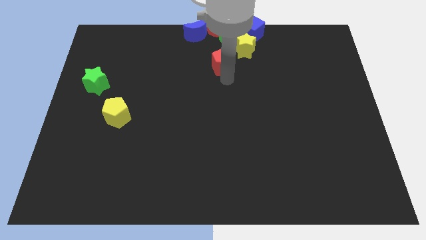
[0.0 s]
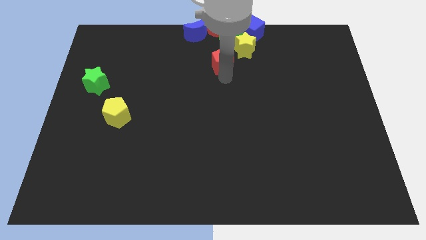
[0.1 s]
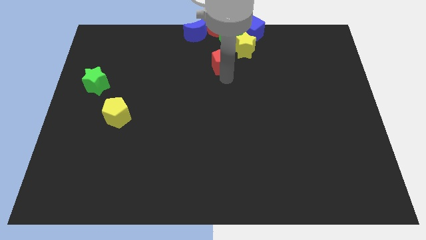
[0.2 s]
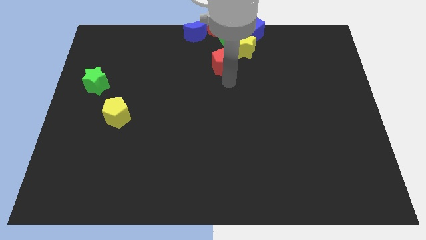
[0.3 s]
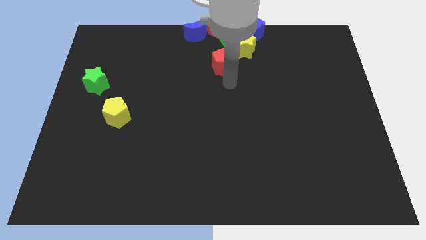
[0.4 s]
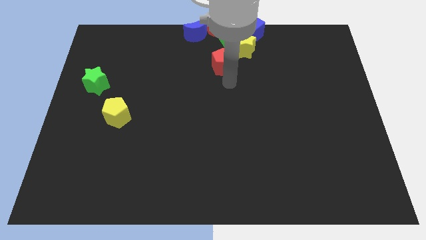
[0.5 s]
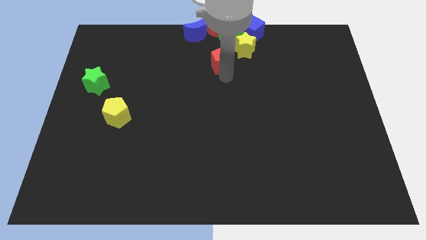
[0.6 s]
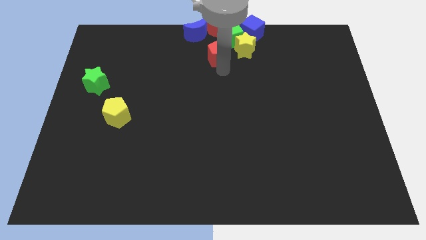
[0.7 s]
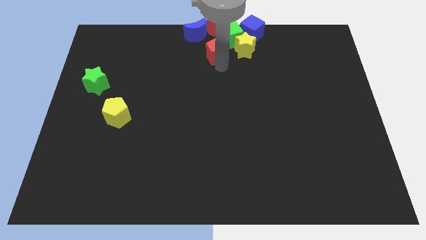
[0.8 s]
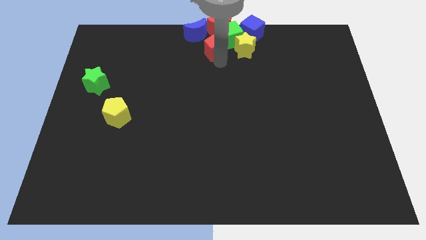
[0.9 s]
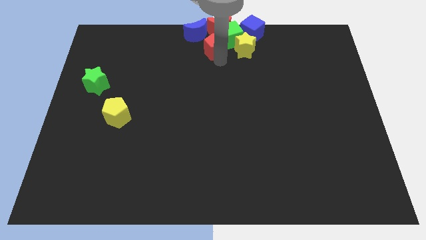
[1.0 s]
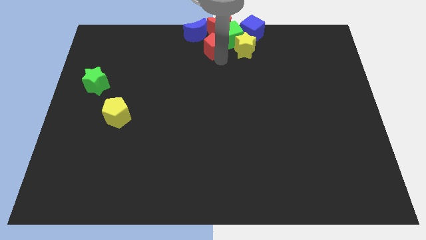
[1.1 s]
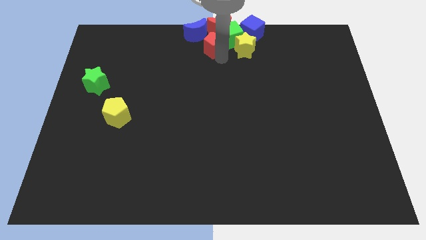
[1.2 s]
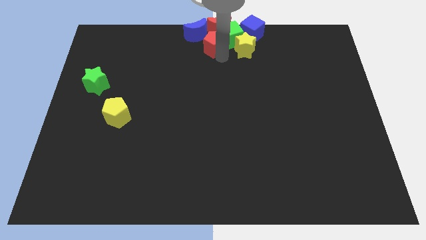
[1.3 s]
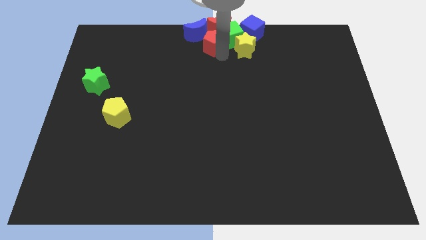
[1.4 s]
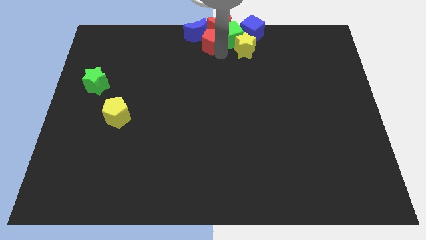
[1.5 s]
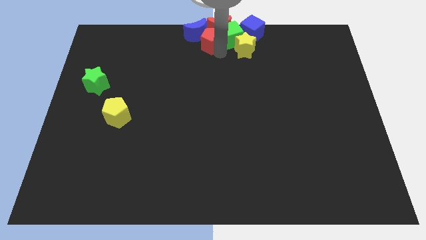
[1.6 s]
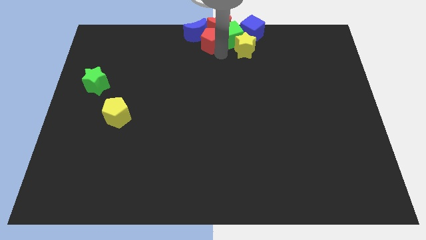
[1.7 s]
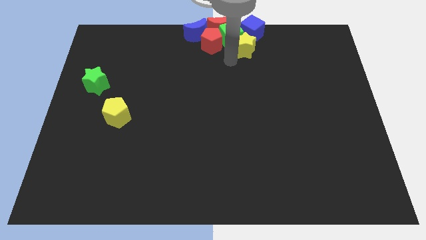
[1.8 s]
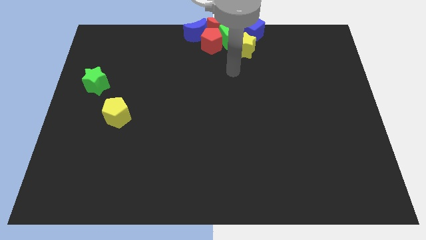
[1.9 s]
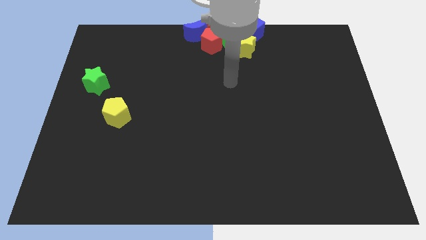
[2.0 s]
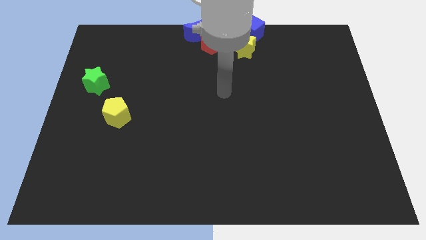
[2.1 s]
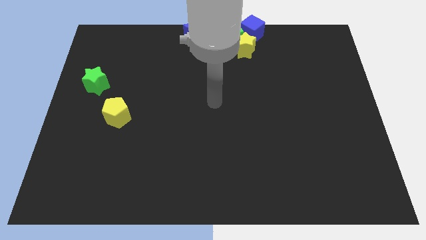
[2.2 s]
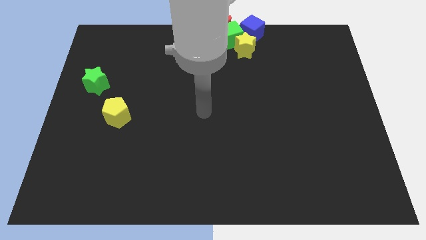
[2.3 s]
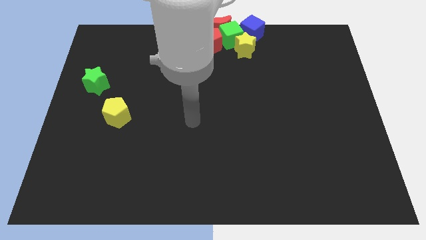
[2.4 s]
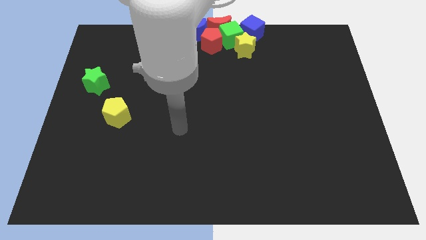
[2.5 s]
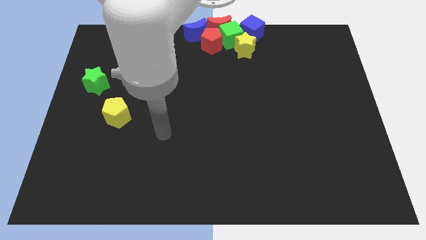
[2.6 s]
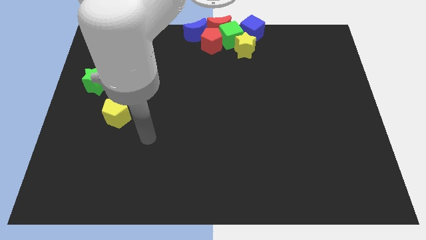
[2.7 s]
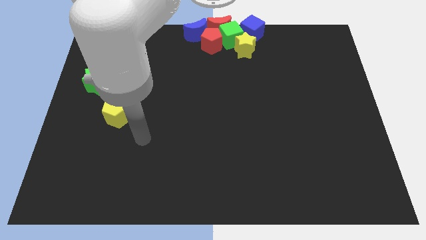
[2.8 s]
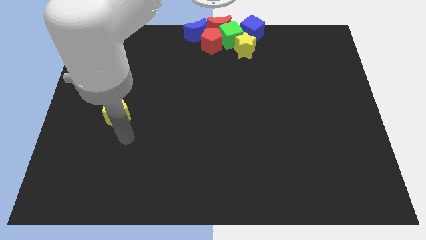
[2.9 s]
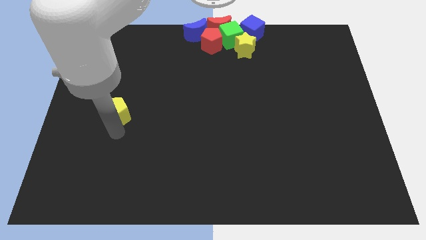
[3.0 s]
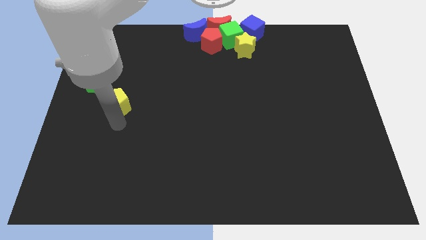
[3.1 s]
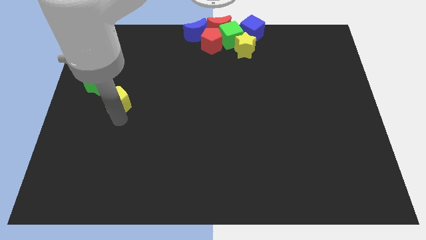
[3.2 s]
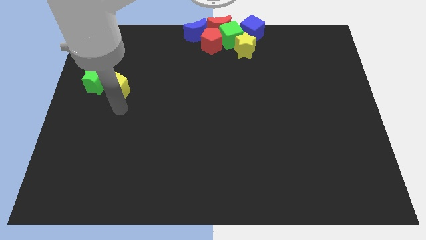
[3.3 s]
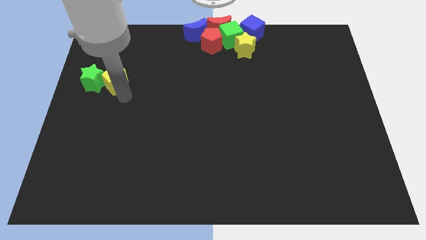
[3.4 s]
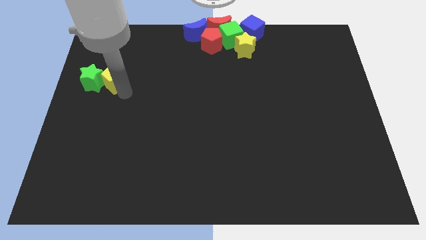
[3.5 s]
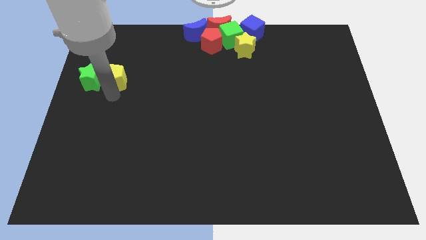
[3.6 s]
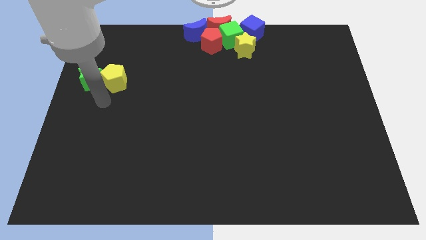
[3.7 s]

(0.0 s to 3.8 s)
place yellow pentagon right to green star

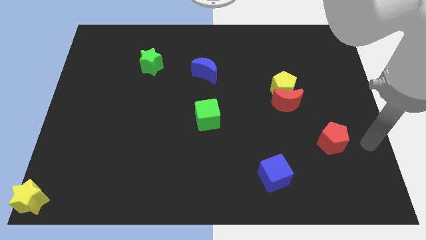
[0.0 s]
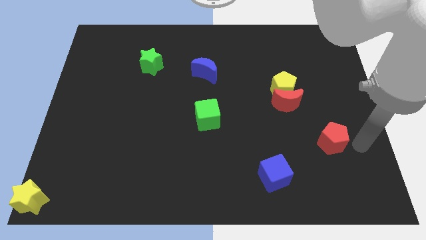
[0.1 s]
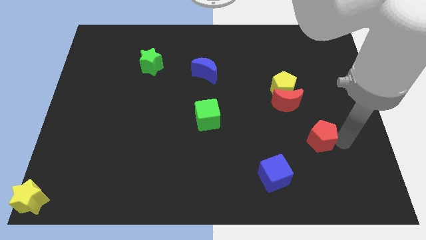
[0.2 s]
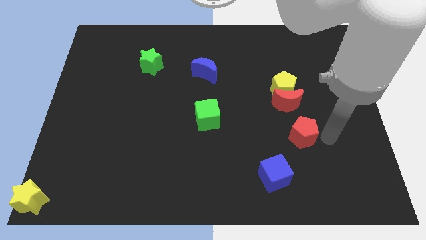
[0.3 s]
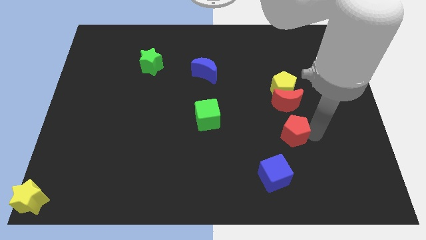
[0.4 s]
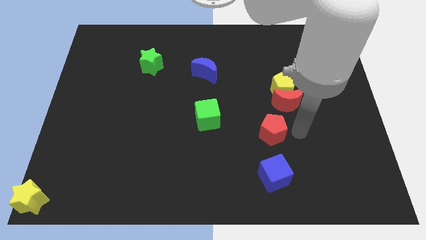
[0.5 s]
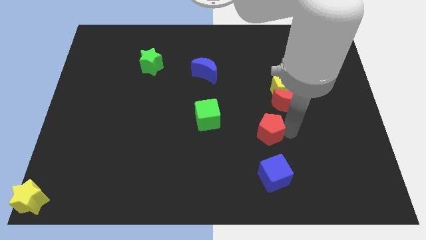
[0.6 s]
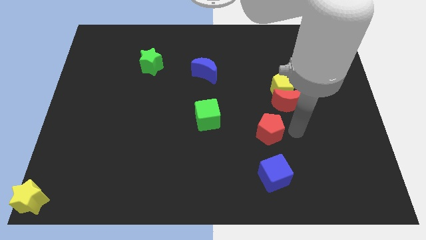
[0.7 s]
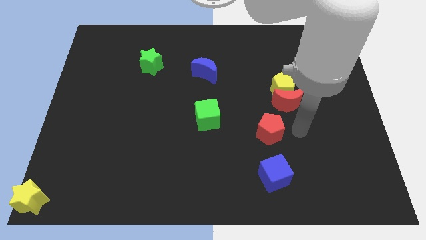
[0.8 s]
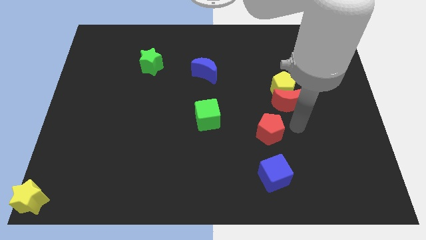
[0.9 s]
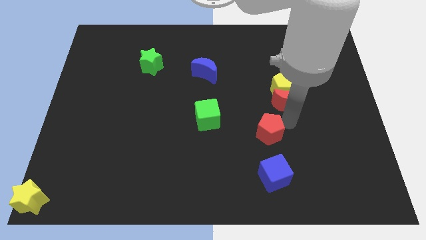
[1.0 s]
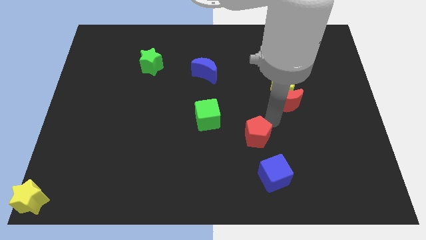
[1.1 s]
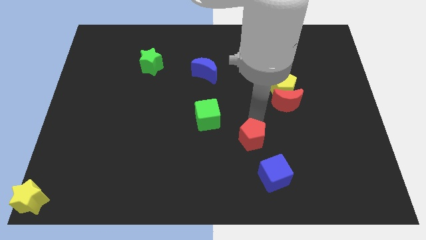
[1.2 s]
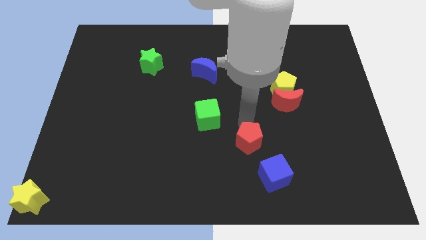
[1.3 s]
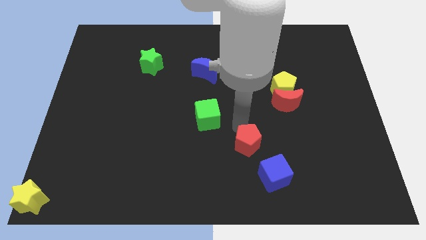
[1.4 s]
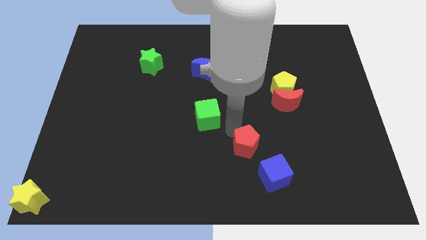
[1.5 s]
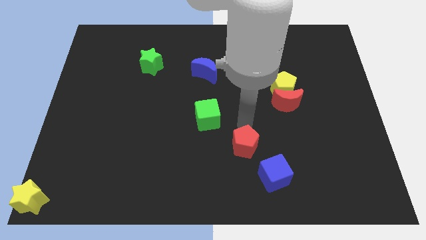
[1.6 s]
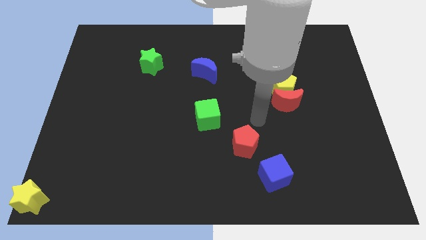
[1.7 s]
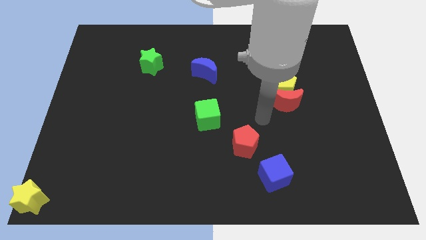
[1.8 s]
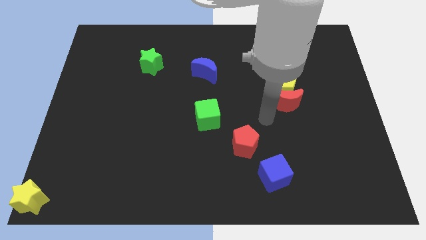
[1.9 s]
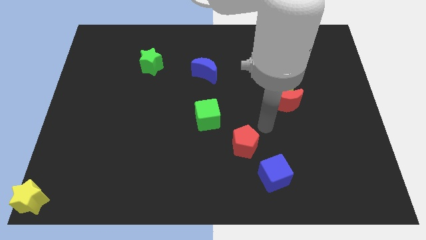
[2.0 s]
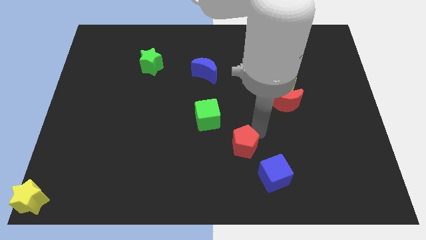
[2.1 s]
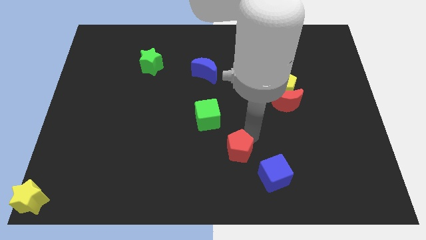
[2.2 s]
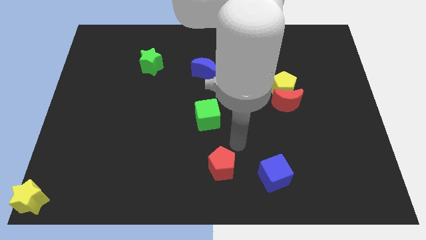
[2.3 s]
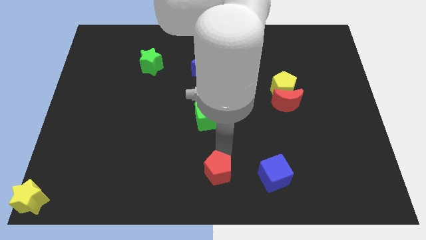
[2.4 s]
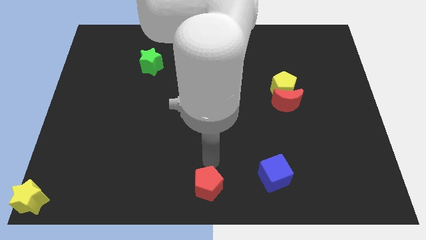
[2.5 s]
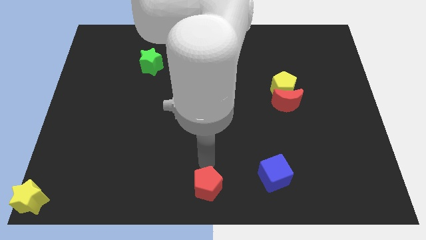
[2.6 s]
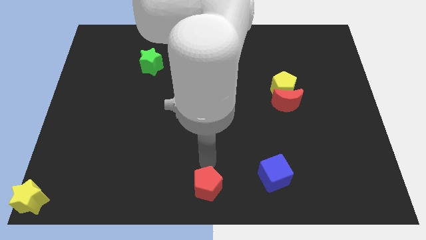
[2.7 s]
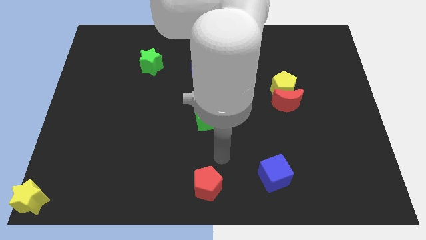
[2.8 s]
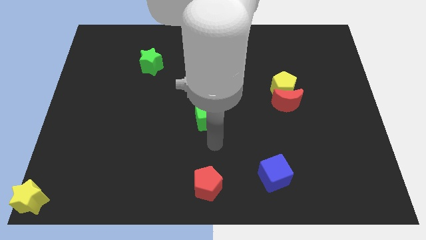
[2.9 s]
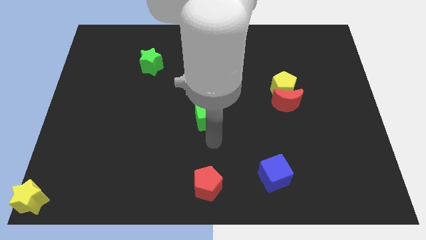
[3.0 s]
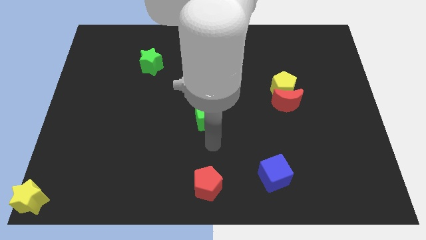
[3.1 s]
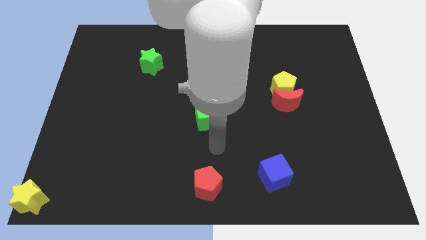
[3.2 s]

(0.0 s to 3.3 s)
move the red pentagon to the bottom center of the board

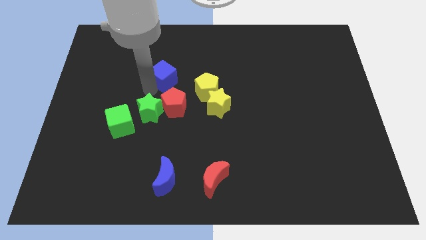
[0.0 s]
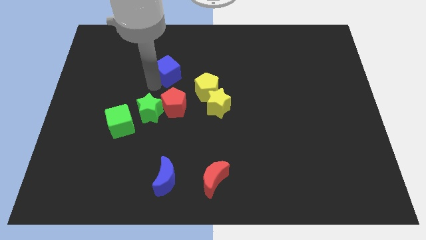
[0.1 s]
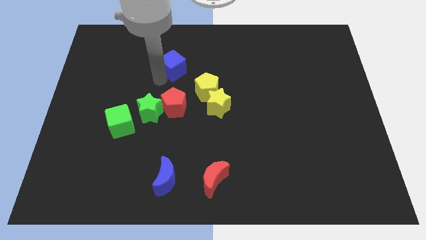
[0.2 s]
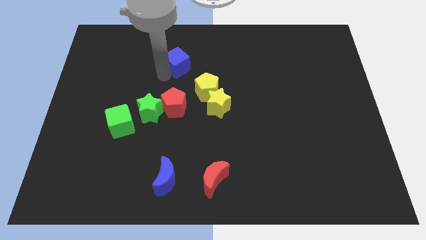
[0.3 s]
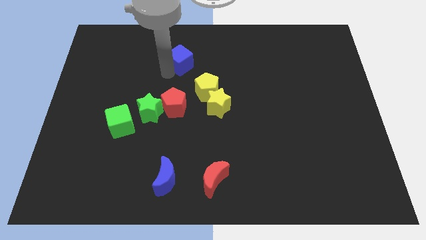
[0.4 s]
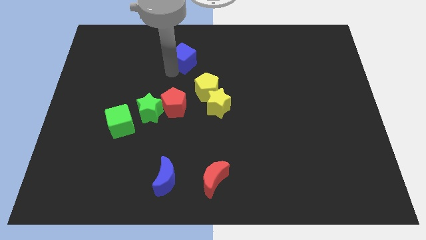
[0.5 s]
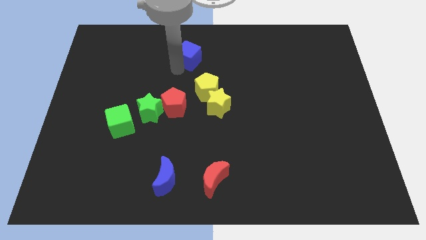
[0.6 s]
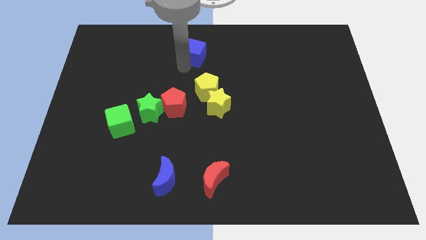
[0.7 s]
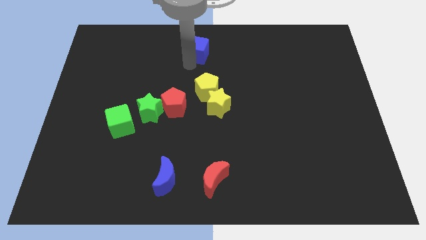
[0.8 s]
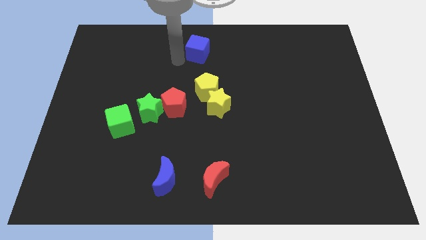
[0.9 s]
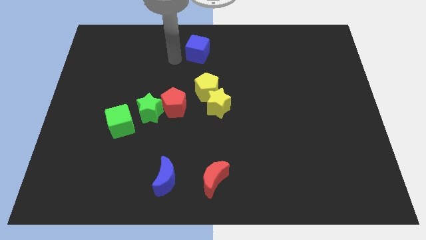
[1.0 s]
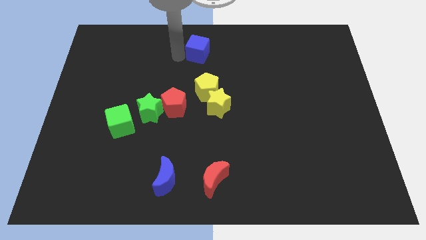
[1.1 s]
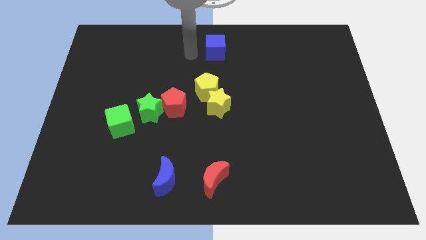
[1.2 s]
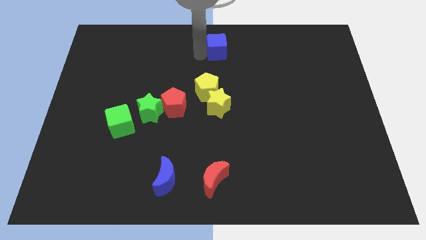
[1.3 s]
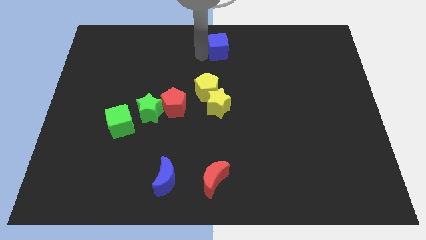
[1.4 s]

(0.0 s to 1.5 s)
move the blue cube to the top center of the board

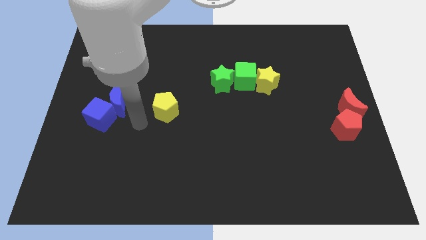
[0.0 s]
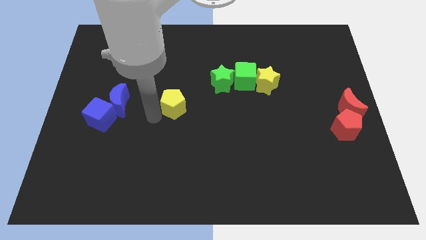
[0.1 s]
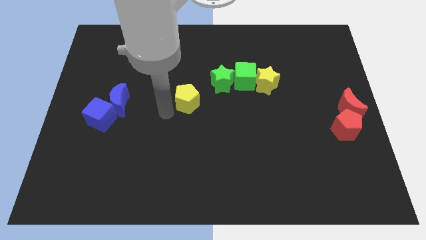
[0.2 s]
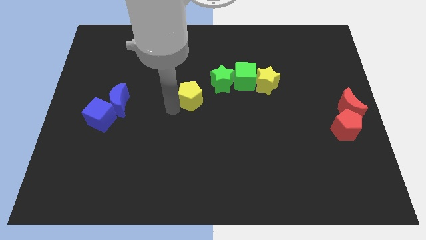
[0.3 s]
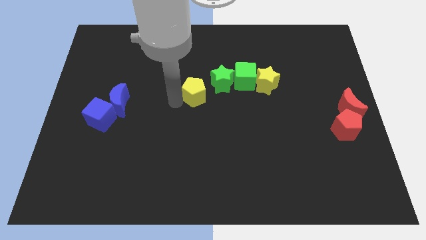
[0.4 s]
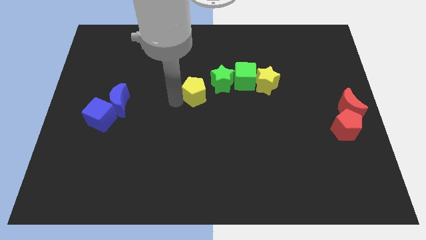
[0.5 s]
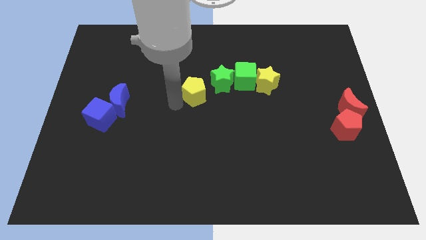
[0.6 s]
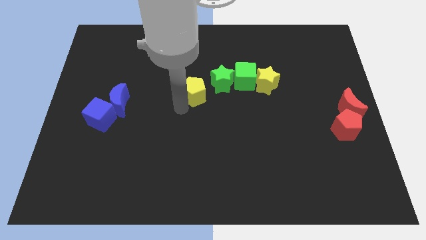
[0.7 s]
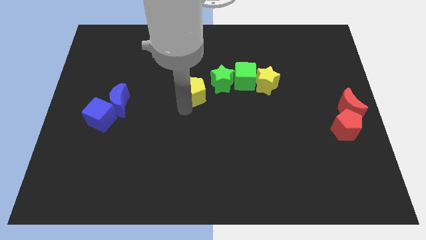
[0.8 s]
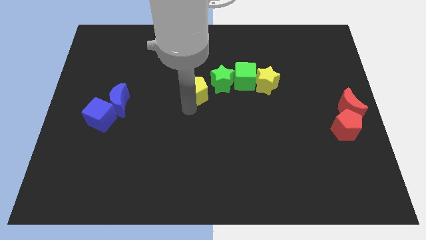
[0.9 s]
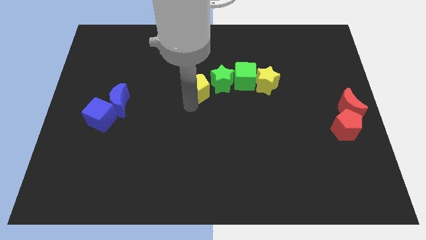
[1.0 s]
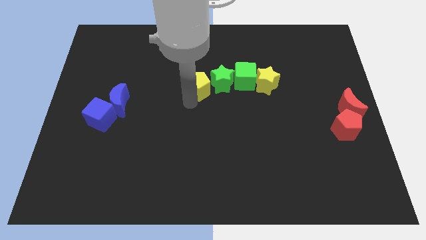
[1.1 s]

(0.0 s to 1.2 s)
place the yellow pentagon at the center of the board
